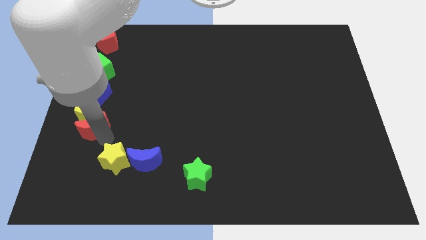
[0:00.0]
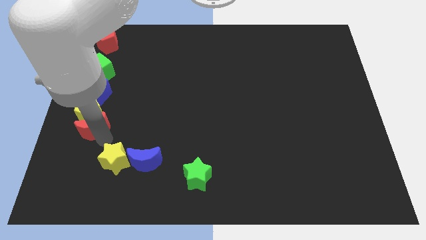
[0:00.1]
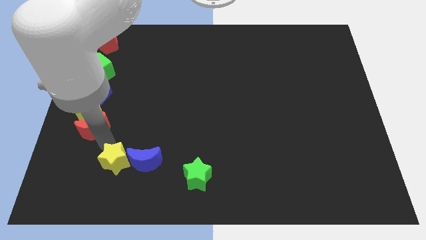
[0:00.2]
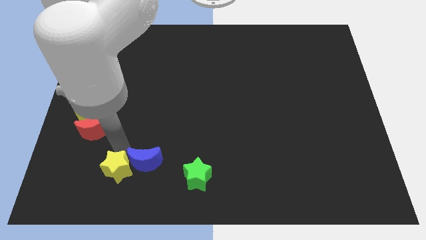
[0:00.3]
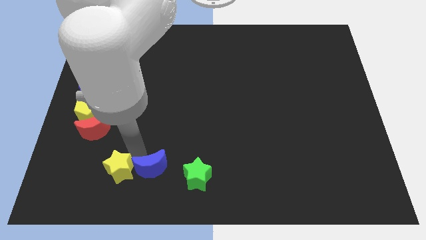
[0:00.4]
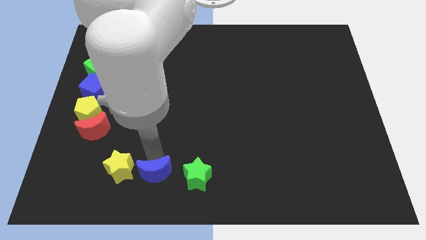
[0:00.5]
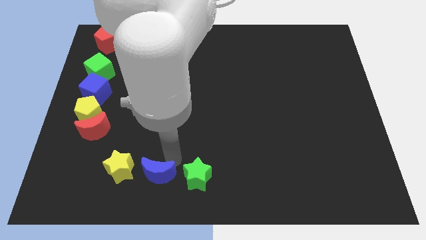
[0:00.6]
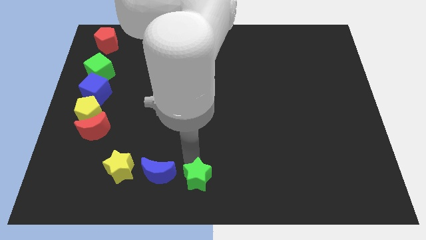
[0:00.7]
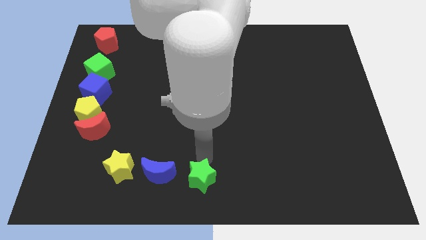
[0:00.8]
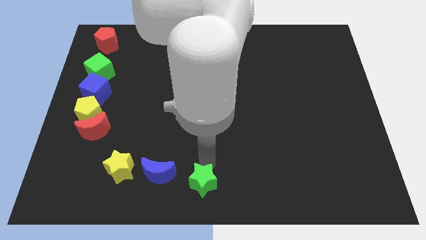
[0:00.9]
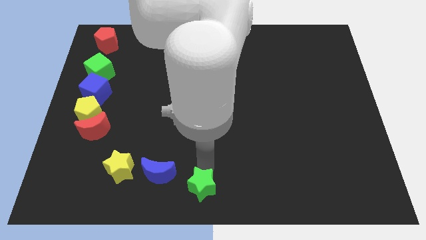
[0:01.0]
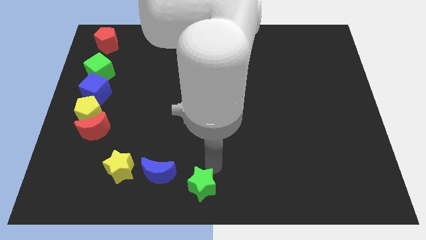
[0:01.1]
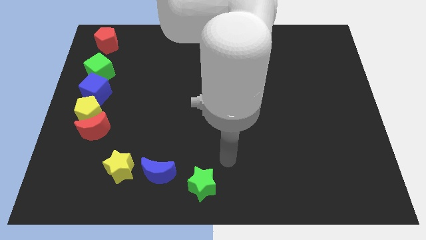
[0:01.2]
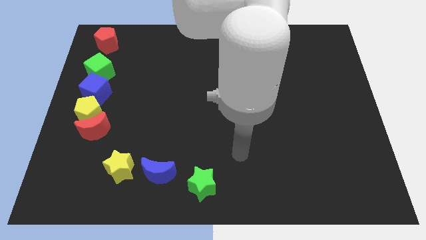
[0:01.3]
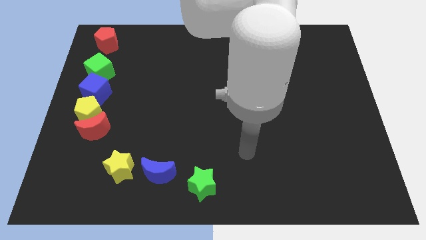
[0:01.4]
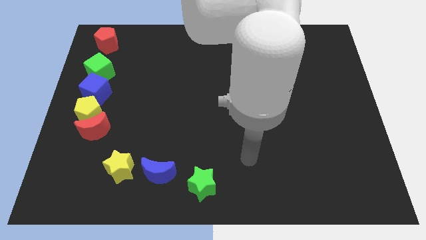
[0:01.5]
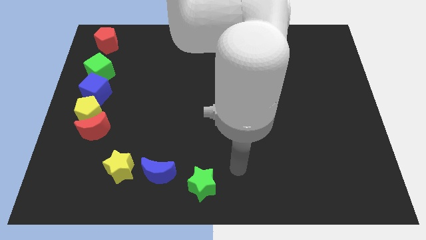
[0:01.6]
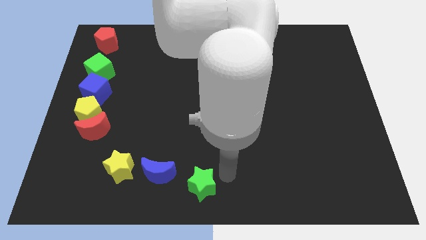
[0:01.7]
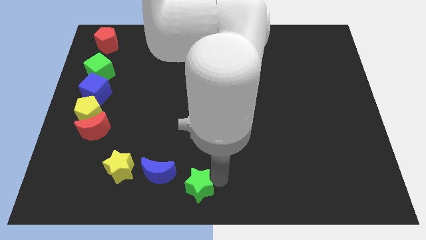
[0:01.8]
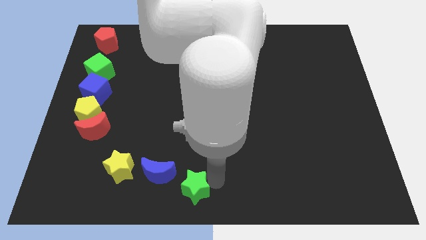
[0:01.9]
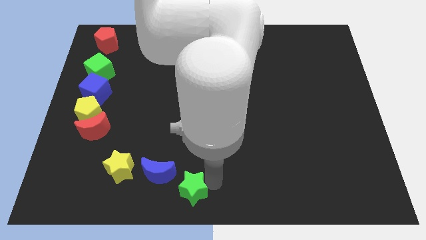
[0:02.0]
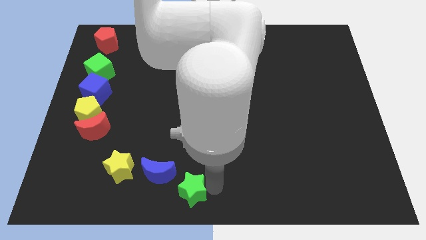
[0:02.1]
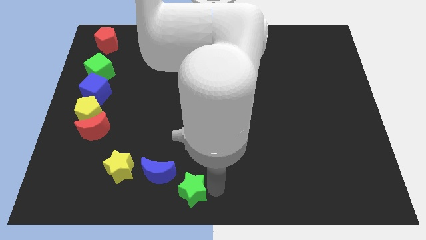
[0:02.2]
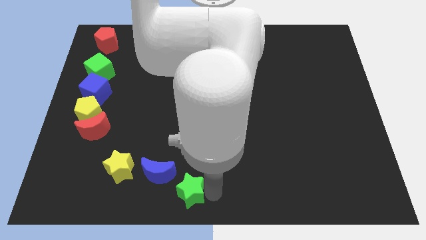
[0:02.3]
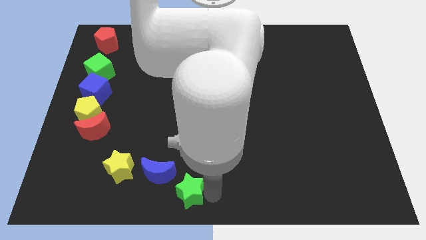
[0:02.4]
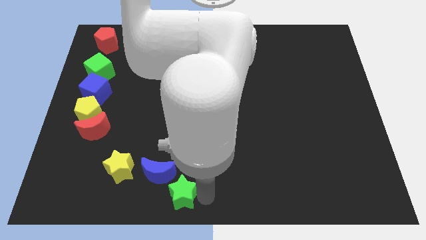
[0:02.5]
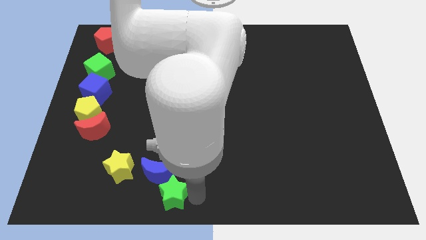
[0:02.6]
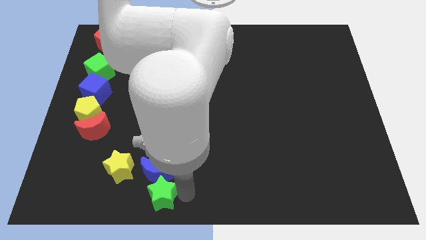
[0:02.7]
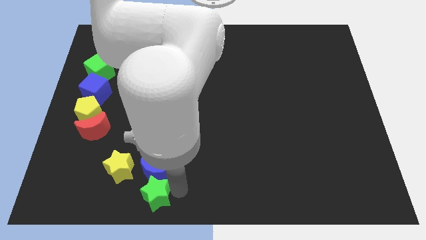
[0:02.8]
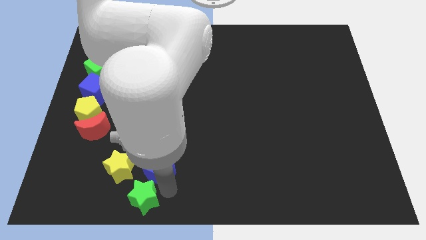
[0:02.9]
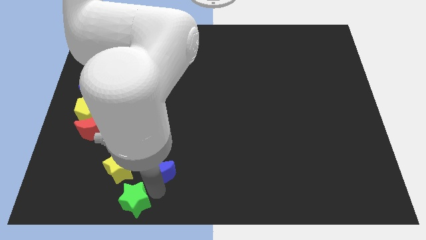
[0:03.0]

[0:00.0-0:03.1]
move the green star at the bottom center of the yellow star and blue moon

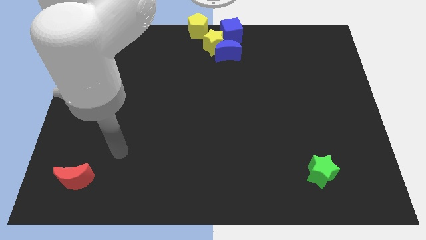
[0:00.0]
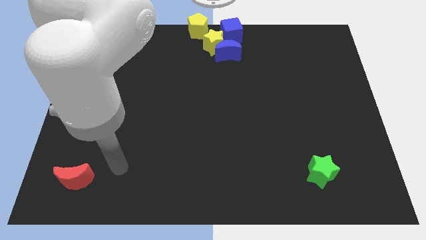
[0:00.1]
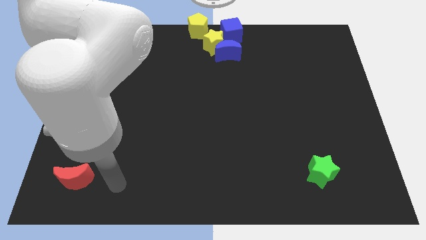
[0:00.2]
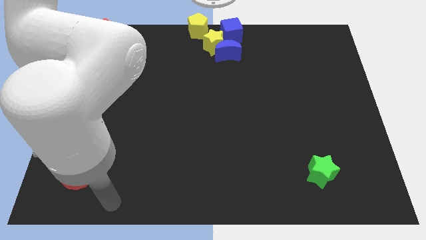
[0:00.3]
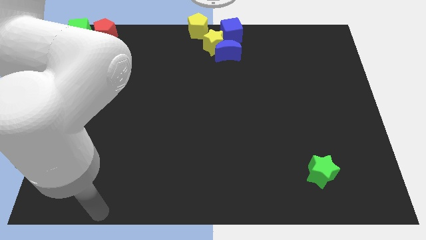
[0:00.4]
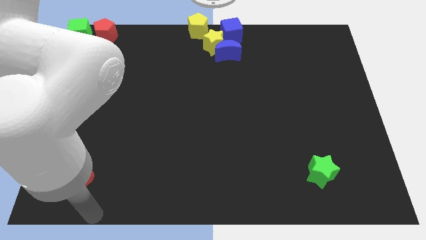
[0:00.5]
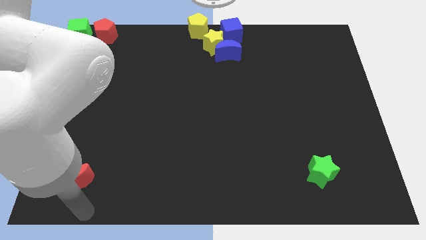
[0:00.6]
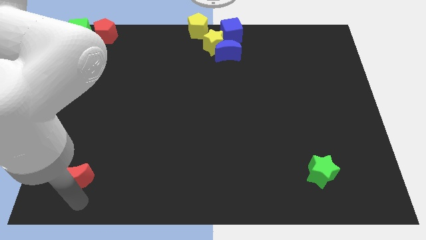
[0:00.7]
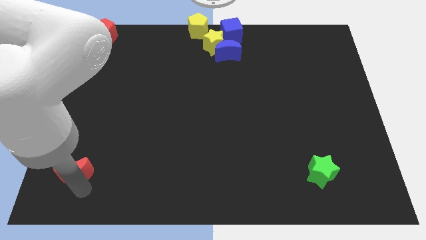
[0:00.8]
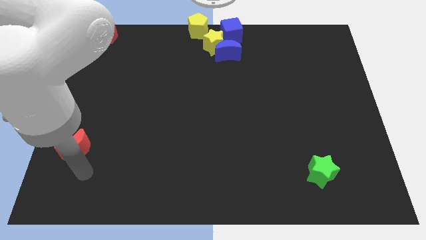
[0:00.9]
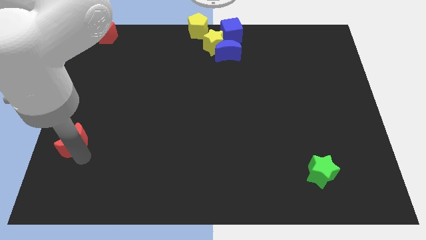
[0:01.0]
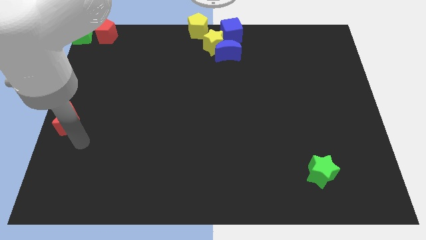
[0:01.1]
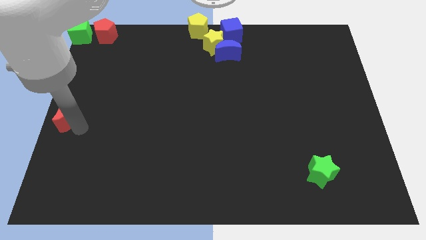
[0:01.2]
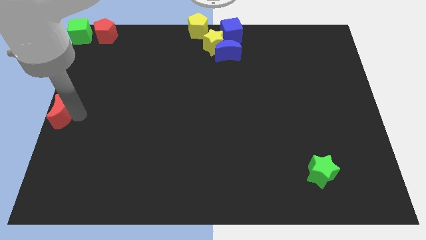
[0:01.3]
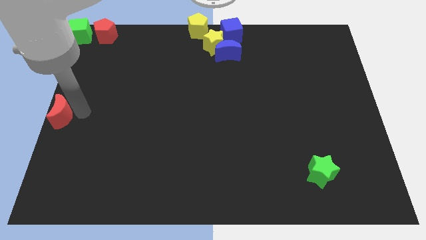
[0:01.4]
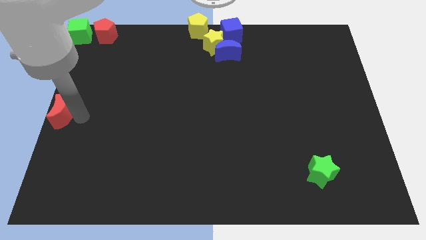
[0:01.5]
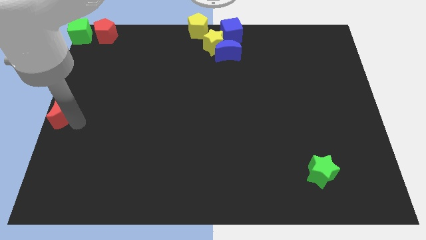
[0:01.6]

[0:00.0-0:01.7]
move the red crescent towards the center left

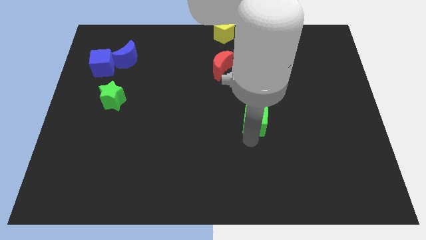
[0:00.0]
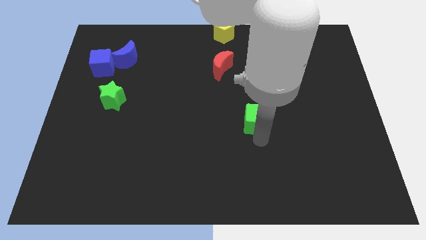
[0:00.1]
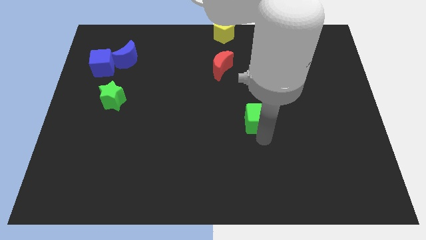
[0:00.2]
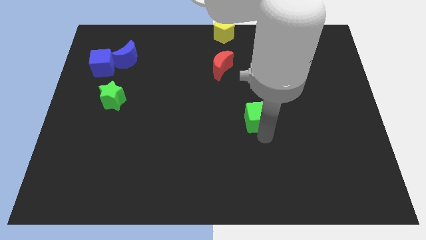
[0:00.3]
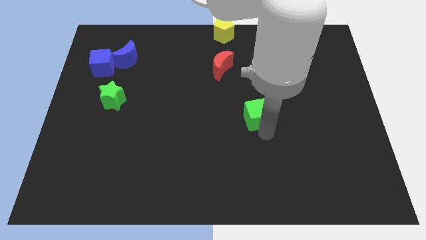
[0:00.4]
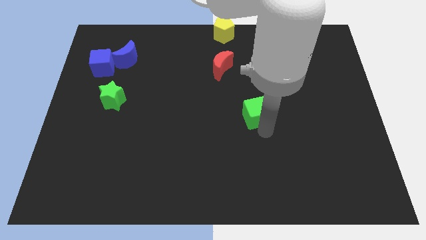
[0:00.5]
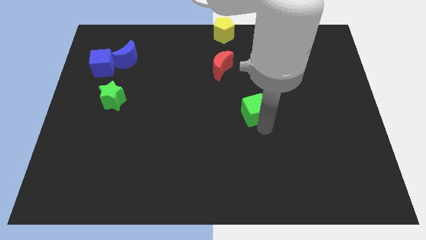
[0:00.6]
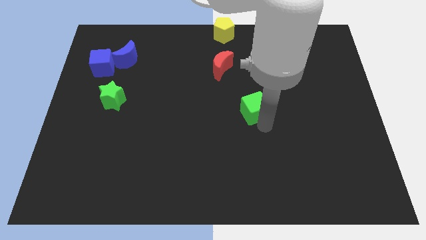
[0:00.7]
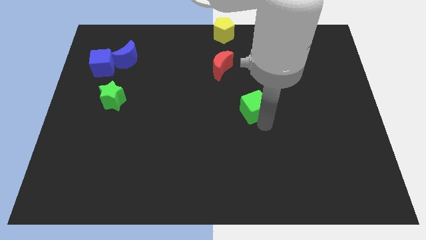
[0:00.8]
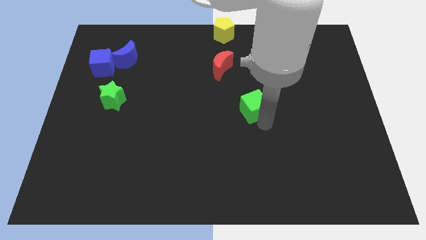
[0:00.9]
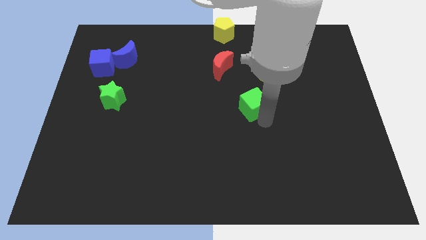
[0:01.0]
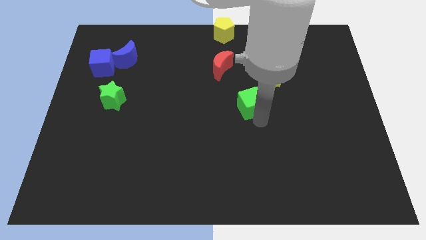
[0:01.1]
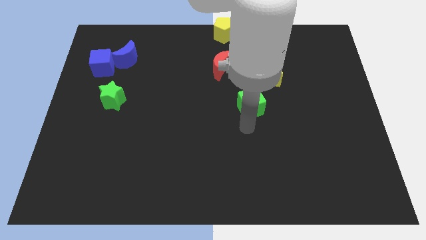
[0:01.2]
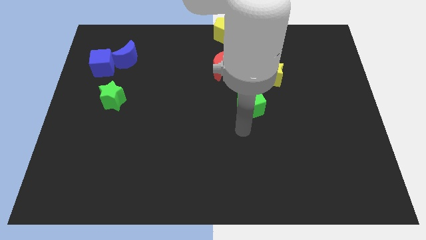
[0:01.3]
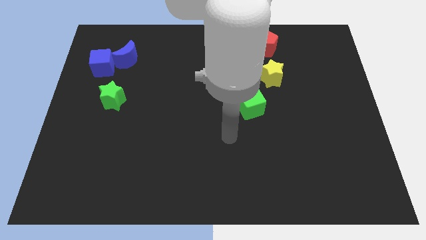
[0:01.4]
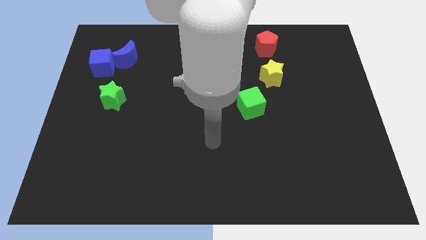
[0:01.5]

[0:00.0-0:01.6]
move the green cube to the top of the board

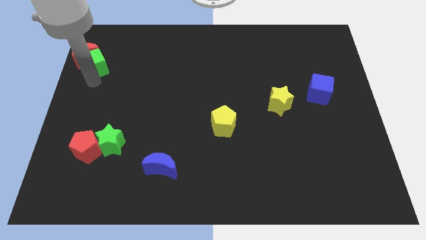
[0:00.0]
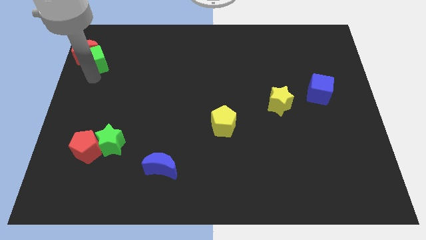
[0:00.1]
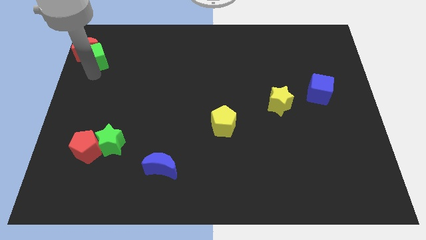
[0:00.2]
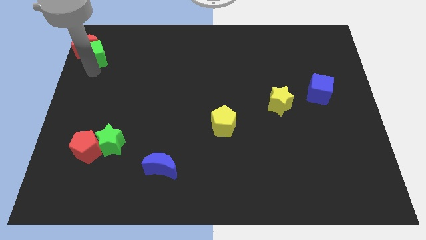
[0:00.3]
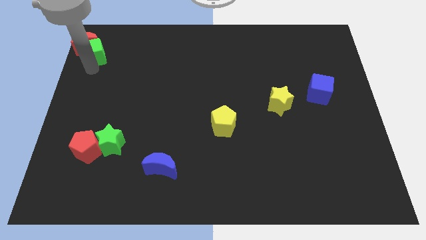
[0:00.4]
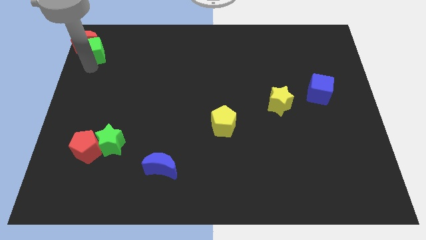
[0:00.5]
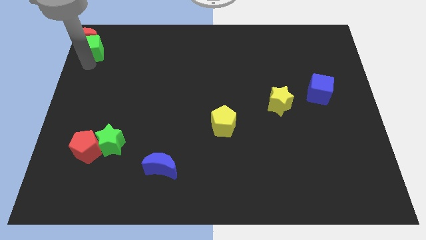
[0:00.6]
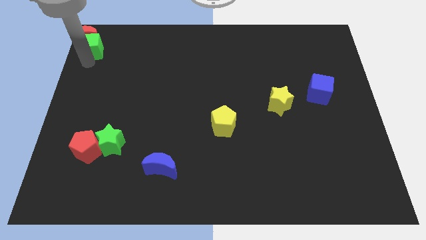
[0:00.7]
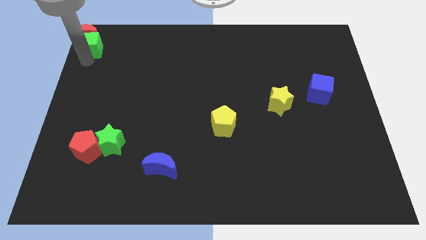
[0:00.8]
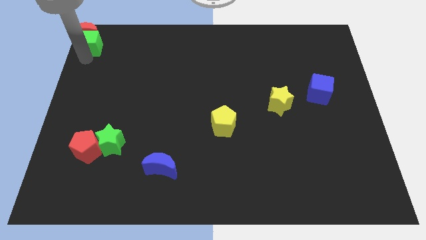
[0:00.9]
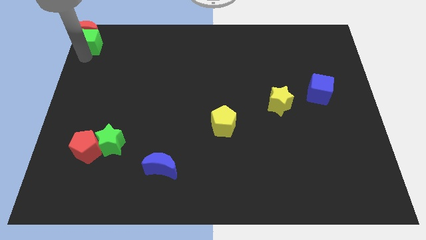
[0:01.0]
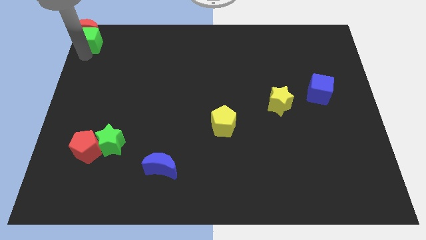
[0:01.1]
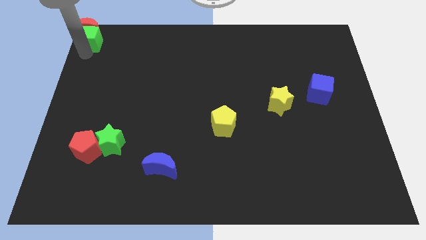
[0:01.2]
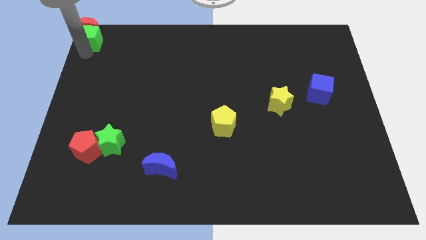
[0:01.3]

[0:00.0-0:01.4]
push the green cube along with the red moon to the top left corner

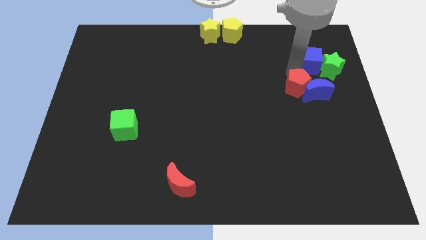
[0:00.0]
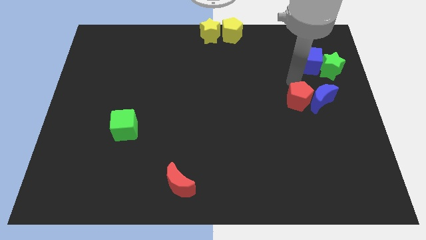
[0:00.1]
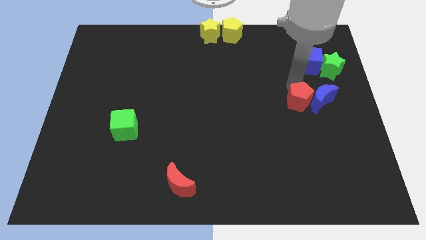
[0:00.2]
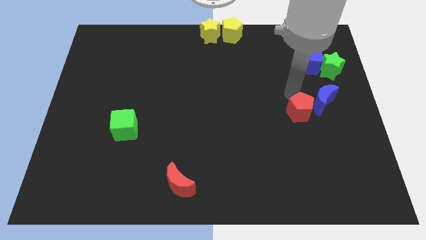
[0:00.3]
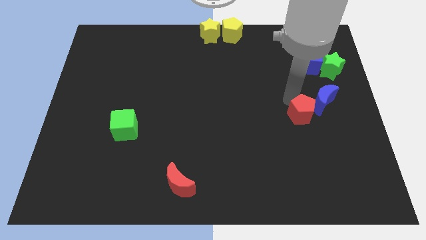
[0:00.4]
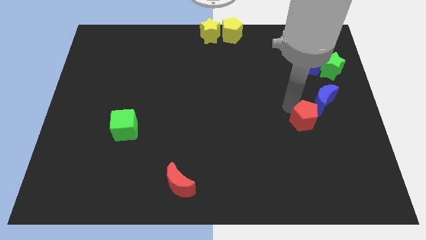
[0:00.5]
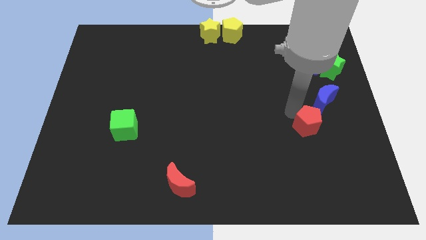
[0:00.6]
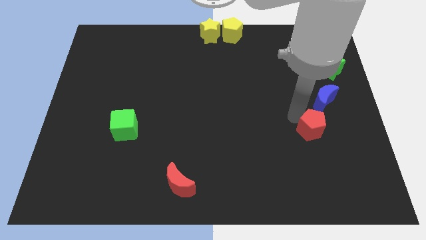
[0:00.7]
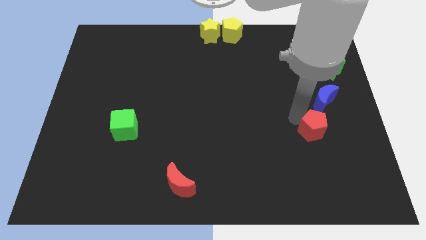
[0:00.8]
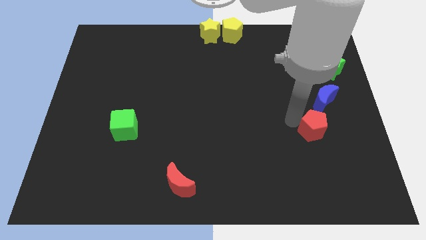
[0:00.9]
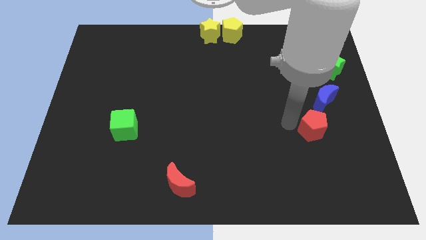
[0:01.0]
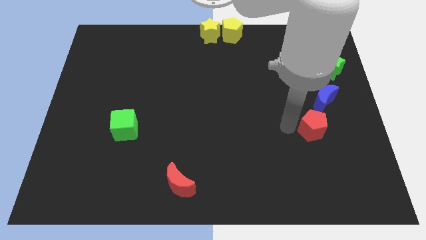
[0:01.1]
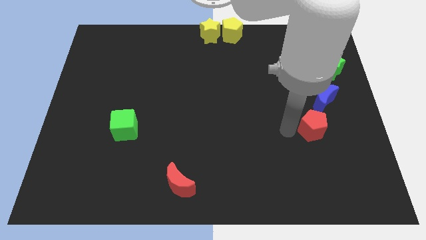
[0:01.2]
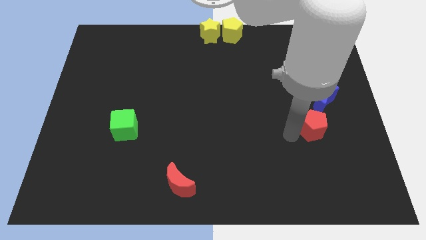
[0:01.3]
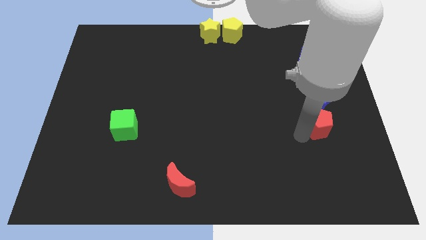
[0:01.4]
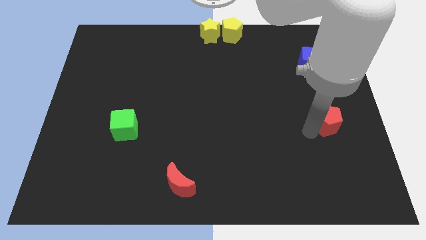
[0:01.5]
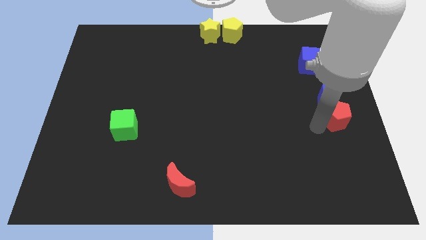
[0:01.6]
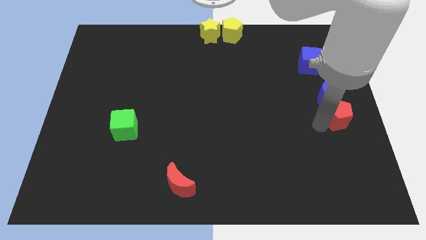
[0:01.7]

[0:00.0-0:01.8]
push the red pentagon towards the center right side of the board
